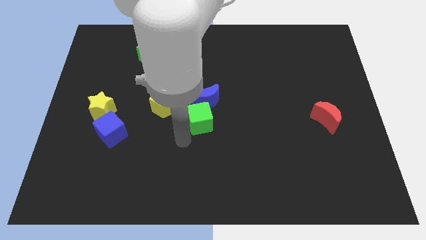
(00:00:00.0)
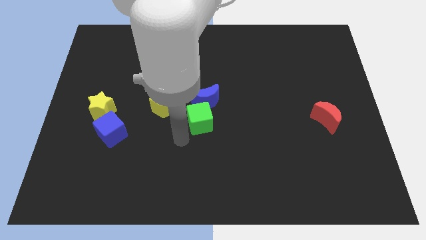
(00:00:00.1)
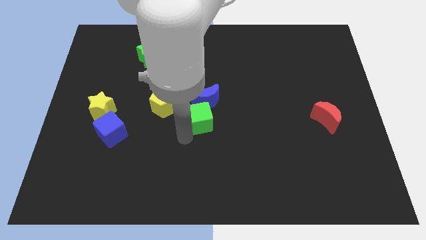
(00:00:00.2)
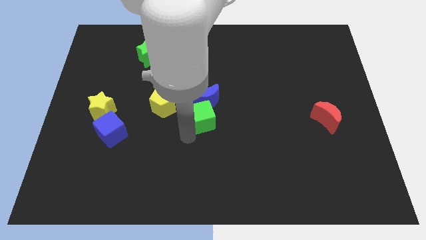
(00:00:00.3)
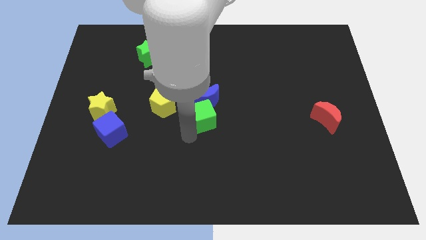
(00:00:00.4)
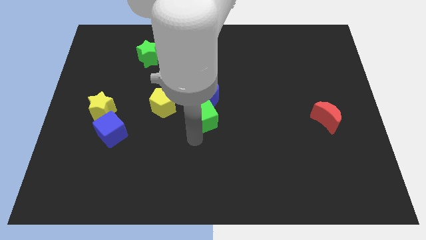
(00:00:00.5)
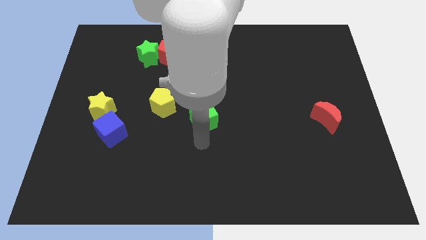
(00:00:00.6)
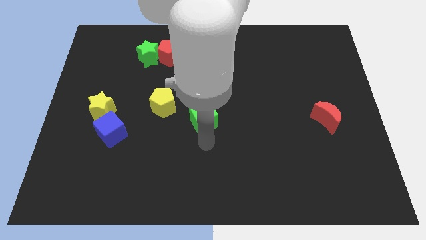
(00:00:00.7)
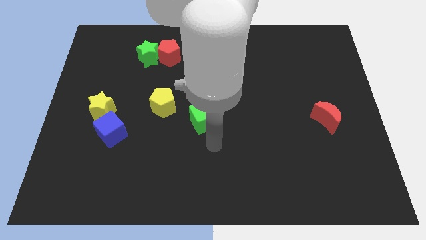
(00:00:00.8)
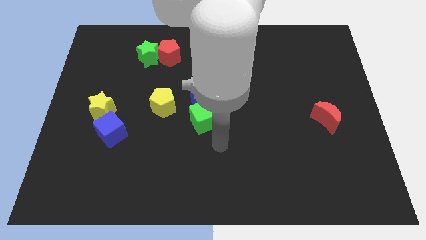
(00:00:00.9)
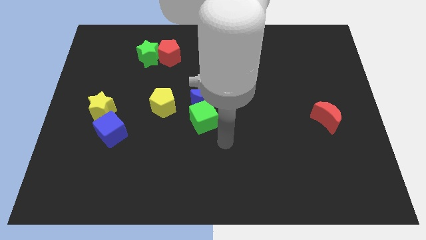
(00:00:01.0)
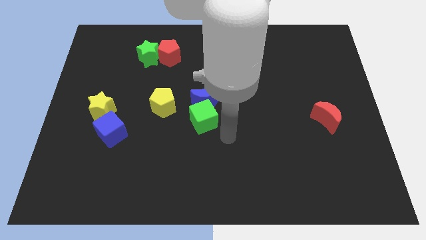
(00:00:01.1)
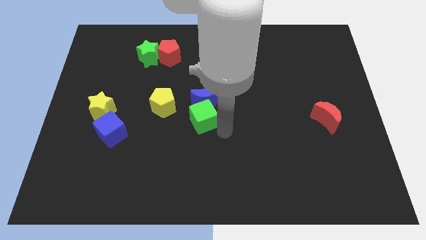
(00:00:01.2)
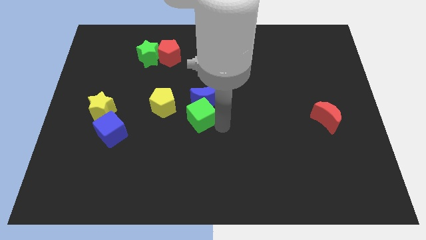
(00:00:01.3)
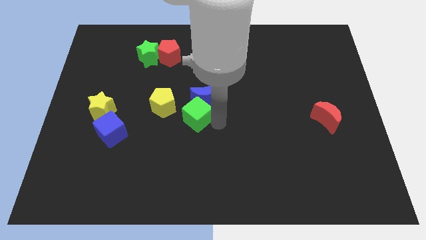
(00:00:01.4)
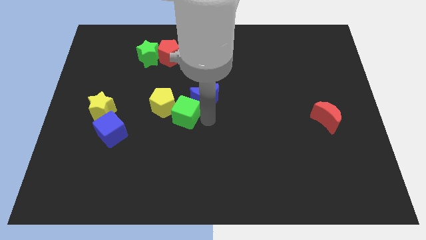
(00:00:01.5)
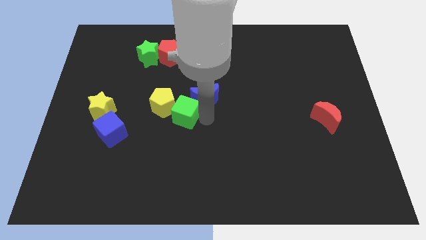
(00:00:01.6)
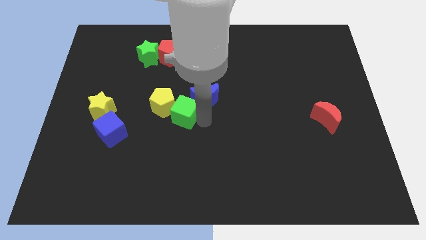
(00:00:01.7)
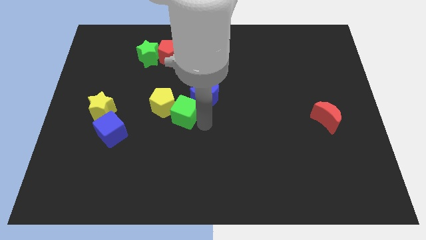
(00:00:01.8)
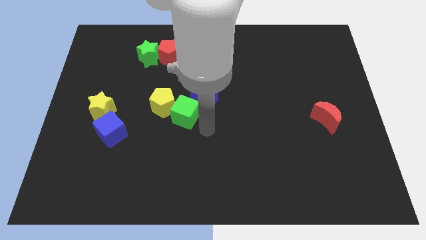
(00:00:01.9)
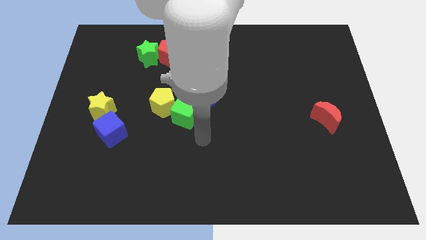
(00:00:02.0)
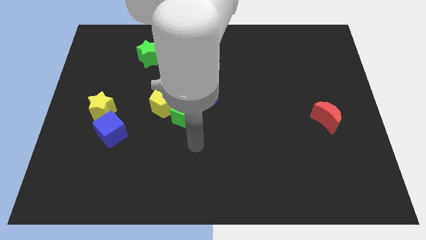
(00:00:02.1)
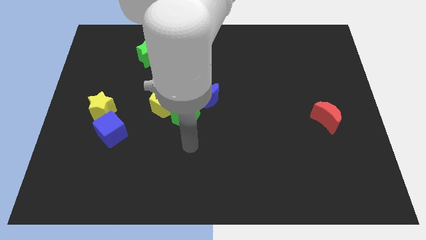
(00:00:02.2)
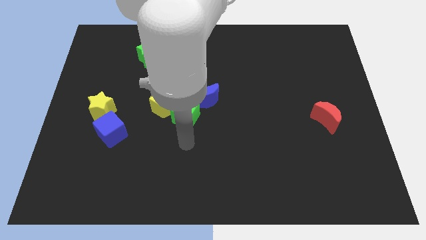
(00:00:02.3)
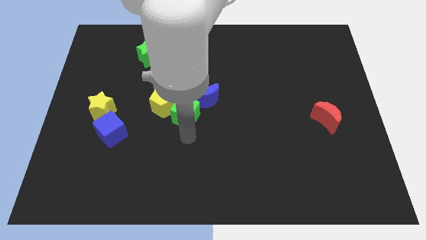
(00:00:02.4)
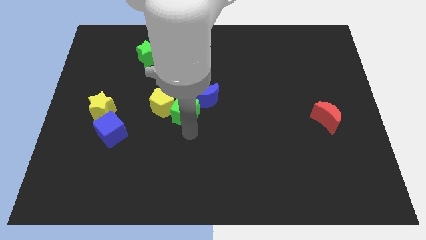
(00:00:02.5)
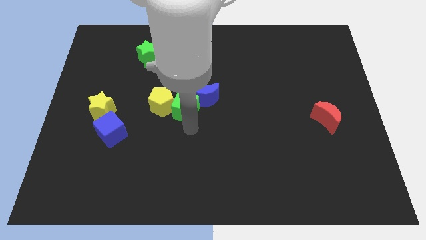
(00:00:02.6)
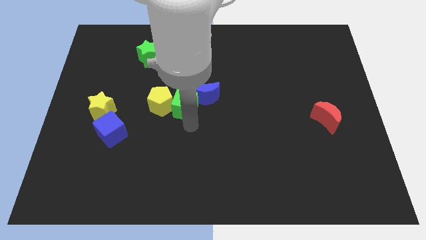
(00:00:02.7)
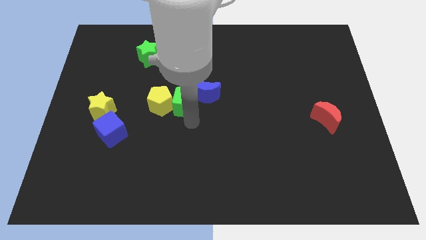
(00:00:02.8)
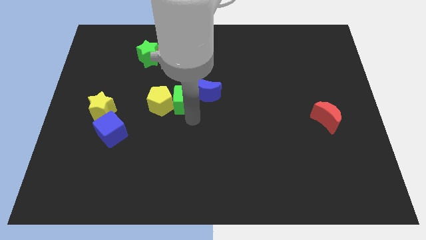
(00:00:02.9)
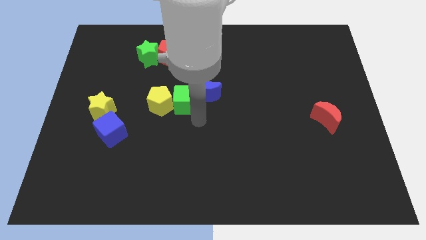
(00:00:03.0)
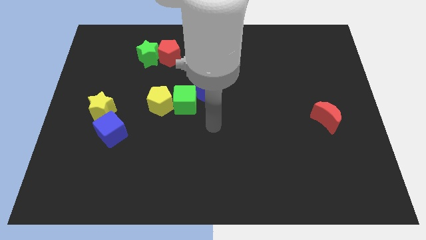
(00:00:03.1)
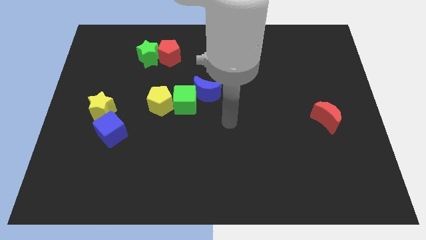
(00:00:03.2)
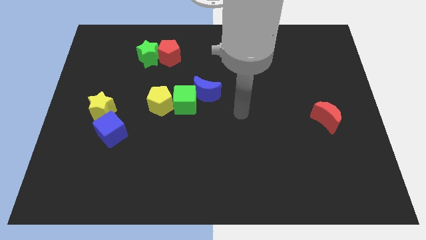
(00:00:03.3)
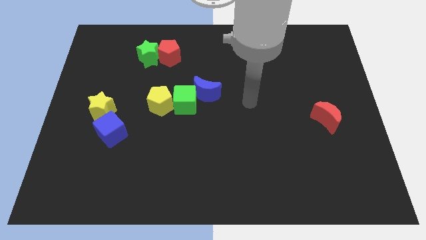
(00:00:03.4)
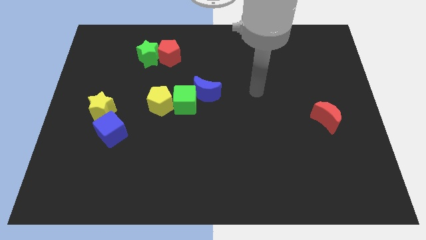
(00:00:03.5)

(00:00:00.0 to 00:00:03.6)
place green cube to the right of yellow pentagon

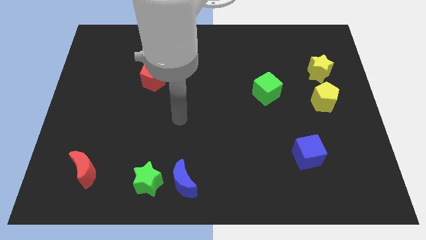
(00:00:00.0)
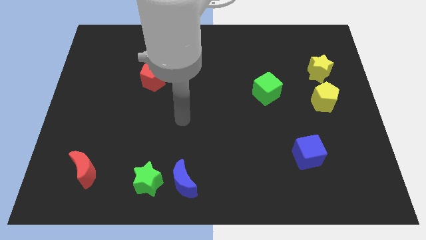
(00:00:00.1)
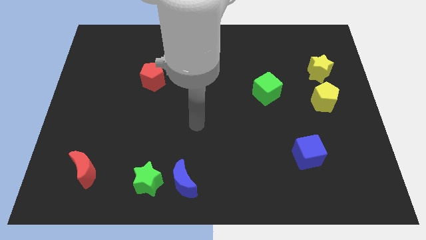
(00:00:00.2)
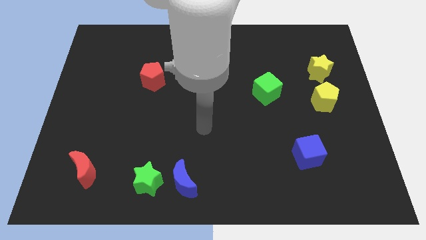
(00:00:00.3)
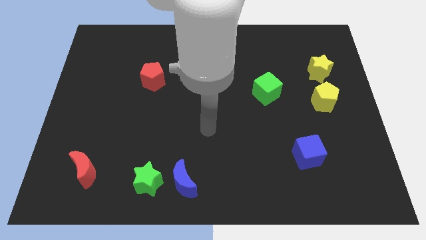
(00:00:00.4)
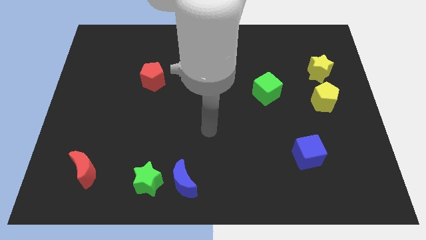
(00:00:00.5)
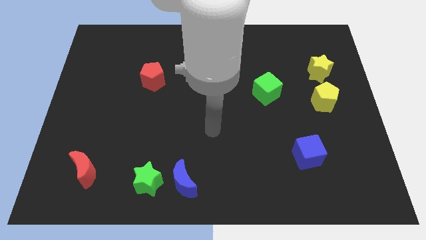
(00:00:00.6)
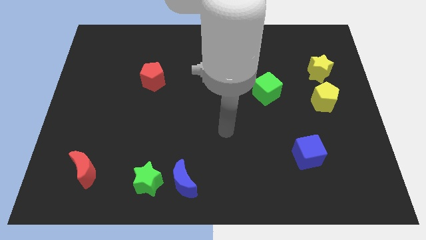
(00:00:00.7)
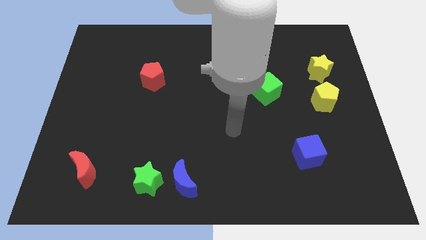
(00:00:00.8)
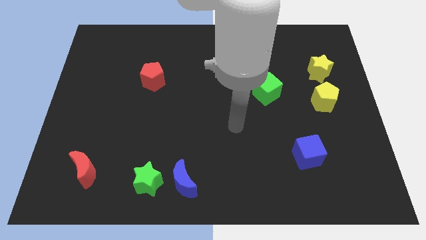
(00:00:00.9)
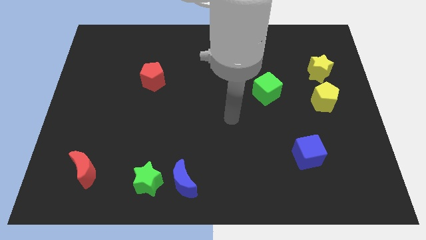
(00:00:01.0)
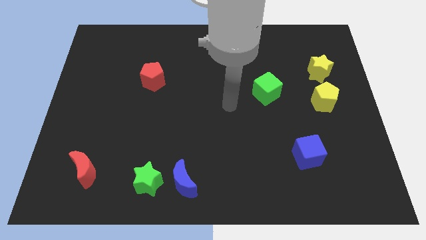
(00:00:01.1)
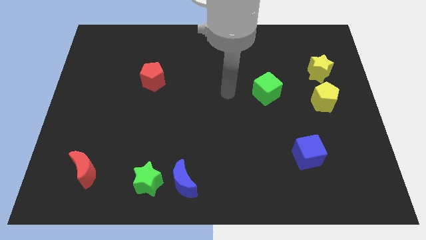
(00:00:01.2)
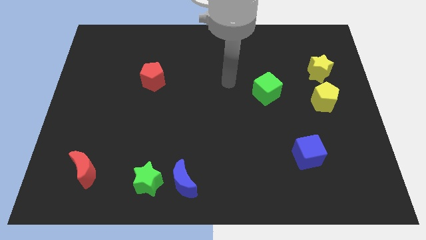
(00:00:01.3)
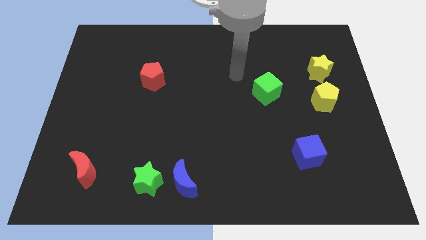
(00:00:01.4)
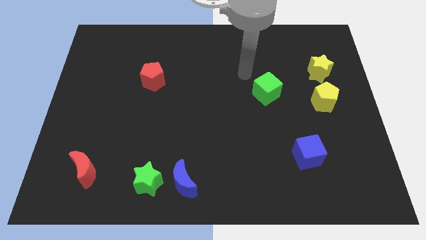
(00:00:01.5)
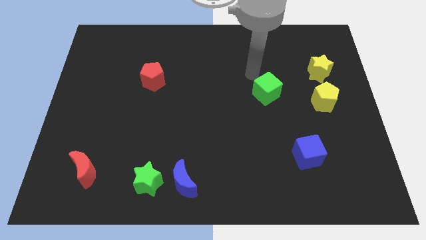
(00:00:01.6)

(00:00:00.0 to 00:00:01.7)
move your arm to the diagonal top left of the green cube

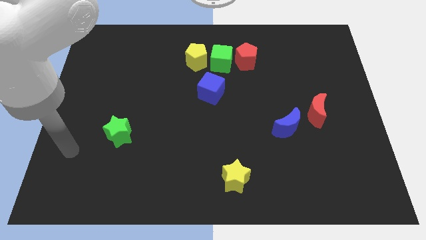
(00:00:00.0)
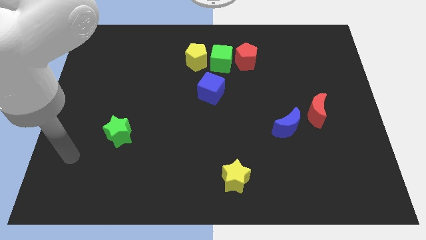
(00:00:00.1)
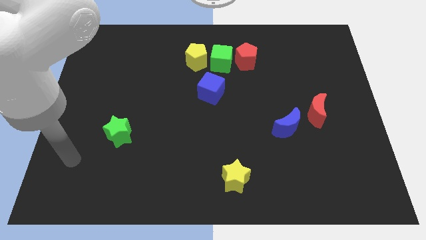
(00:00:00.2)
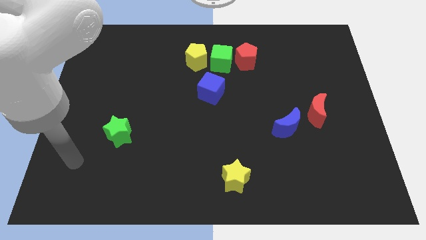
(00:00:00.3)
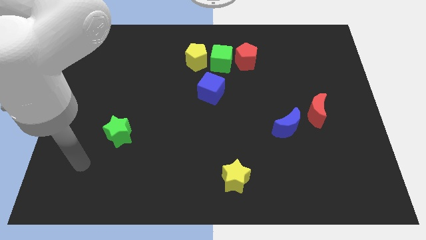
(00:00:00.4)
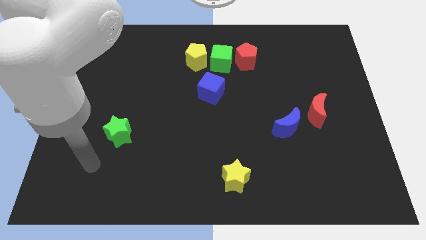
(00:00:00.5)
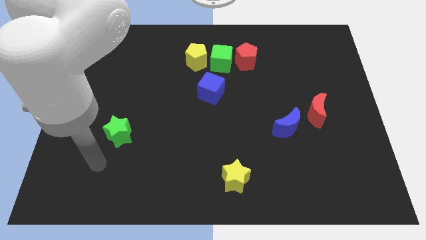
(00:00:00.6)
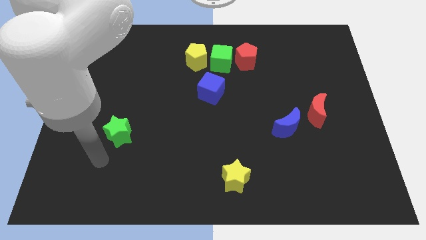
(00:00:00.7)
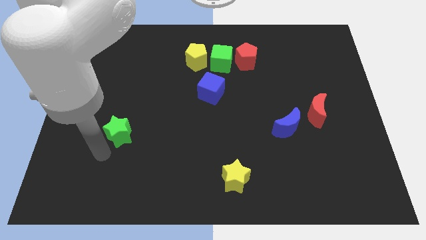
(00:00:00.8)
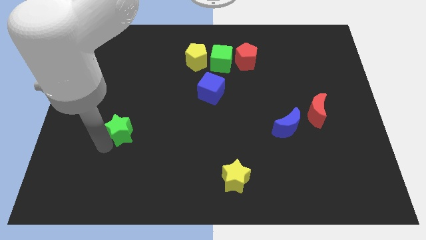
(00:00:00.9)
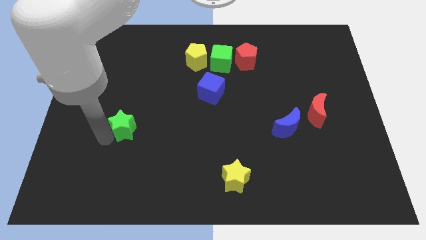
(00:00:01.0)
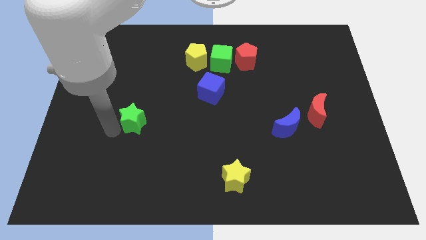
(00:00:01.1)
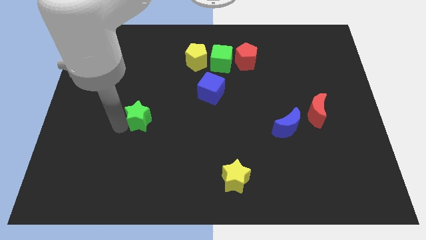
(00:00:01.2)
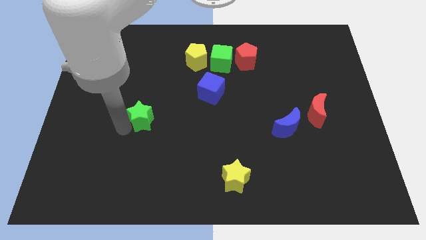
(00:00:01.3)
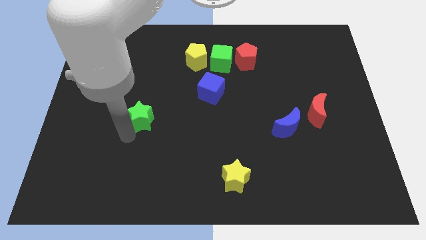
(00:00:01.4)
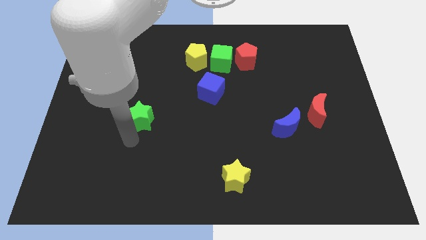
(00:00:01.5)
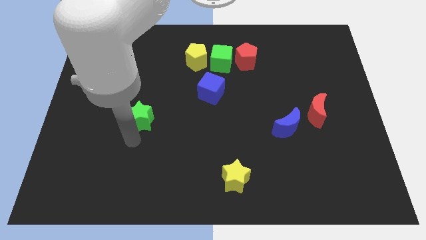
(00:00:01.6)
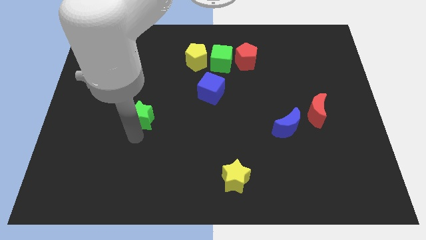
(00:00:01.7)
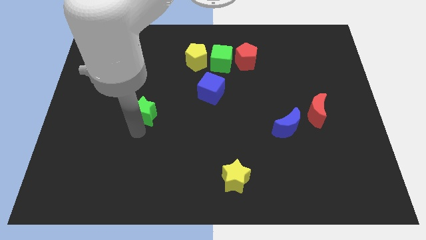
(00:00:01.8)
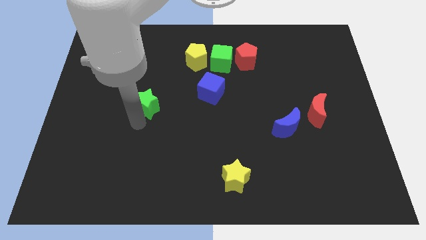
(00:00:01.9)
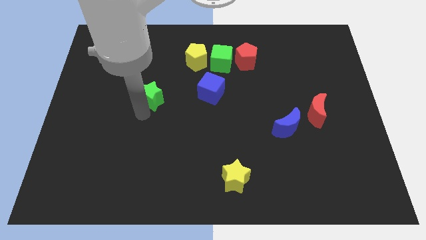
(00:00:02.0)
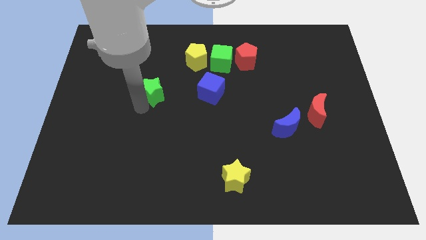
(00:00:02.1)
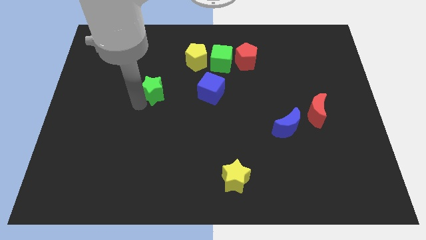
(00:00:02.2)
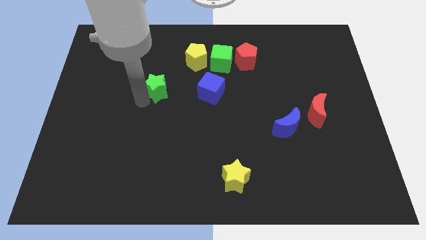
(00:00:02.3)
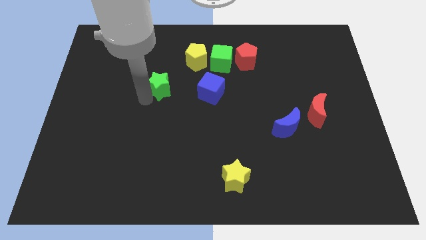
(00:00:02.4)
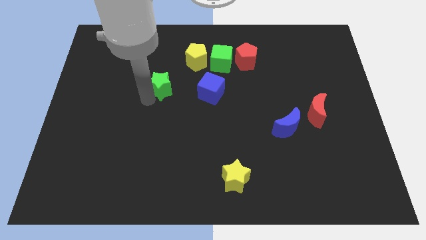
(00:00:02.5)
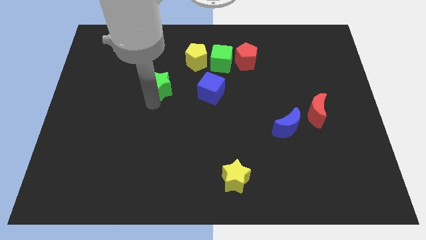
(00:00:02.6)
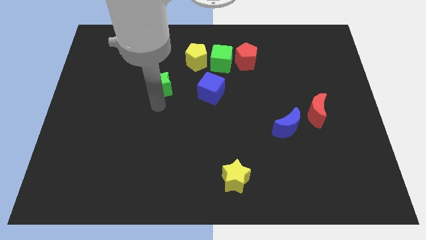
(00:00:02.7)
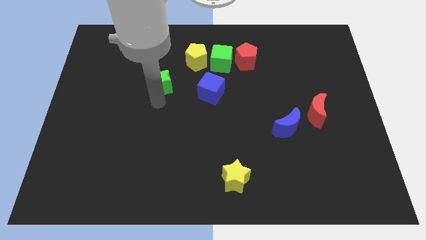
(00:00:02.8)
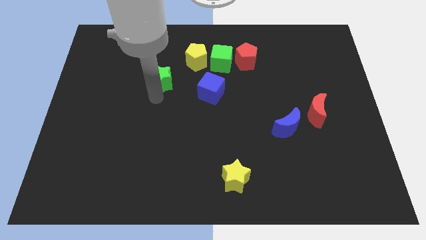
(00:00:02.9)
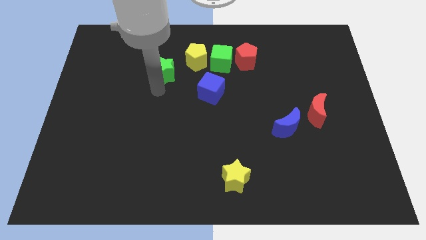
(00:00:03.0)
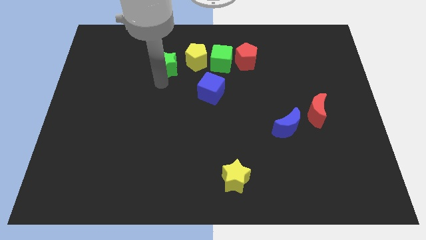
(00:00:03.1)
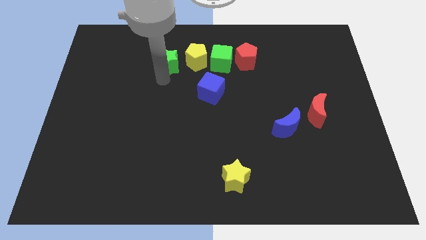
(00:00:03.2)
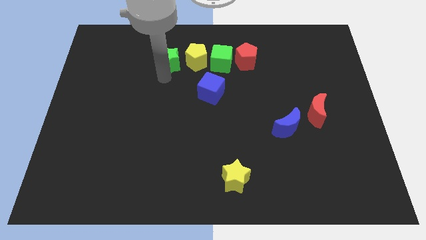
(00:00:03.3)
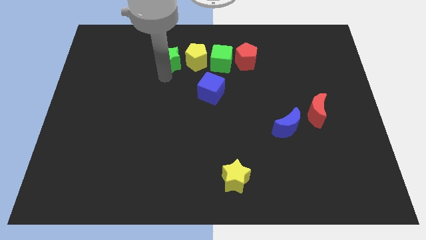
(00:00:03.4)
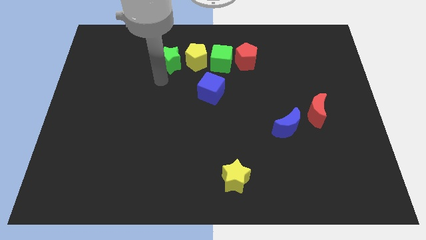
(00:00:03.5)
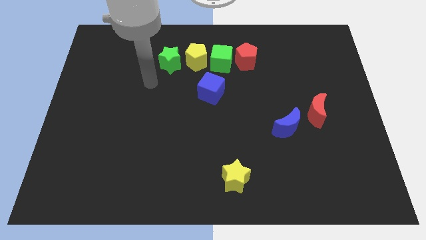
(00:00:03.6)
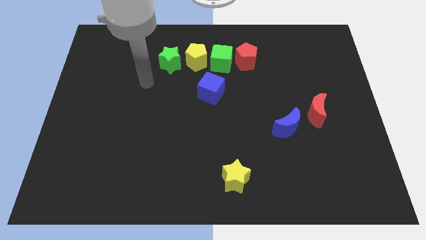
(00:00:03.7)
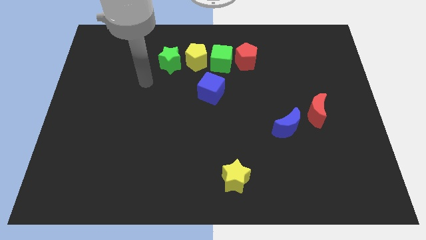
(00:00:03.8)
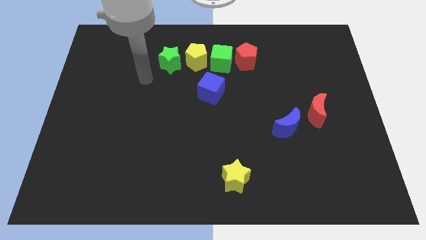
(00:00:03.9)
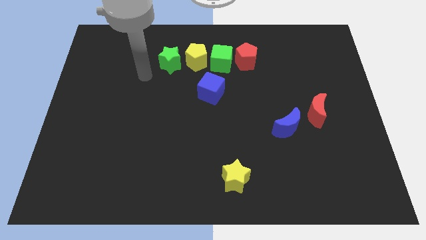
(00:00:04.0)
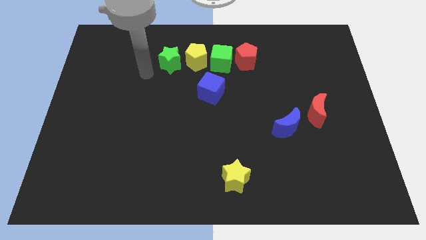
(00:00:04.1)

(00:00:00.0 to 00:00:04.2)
move the green star to the left side of the yellow pentagon
